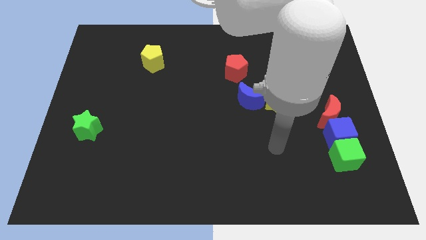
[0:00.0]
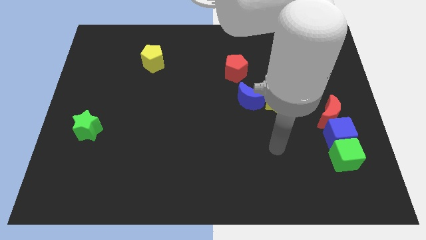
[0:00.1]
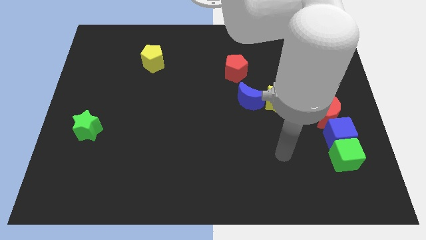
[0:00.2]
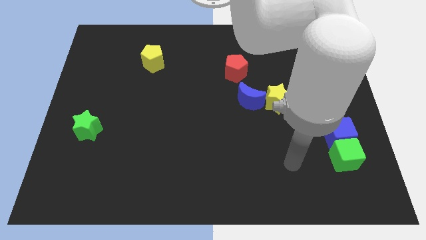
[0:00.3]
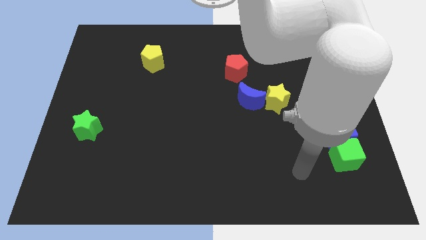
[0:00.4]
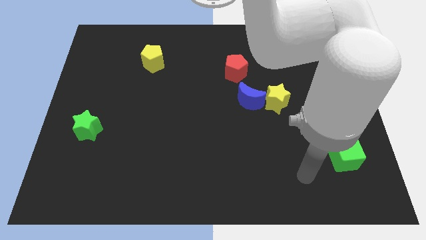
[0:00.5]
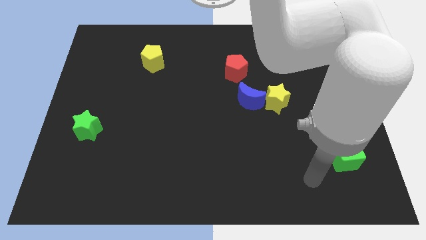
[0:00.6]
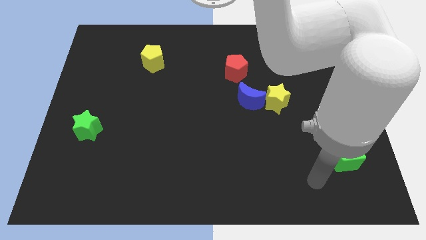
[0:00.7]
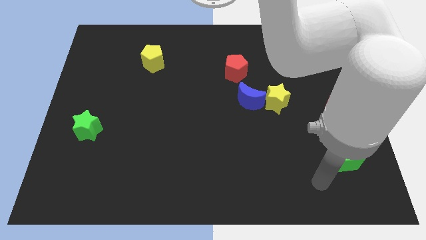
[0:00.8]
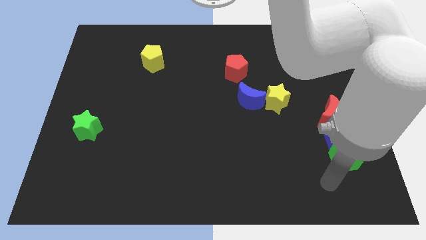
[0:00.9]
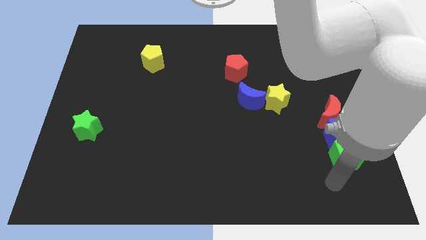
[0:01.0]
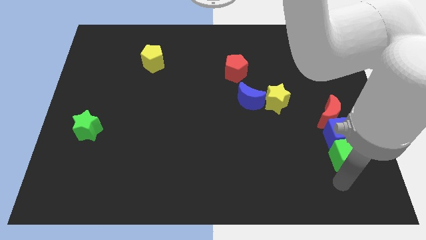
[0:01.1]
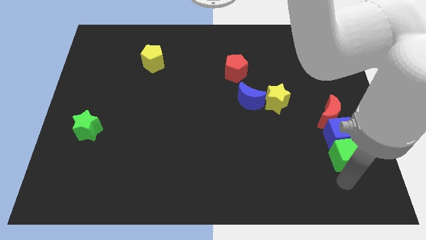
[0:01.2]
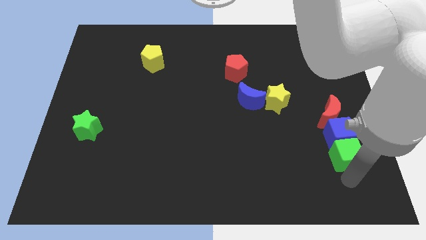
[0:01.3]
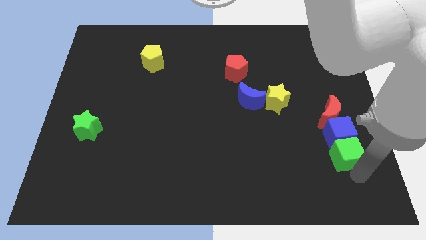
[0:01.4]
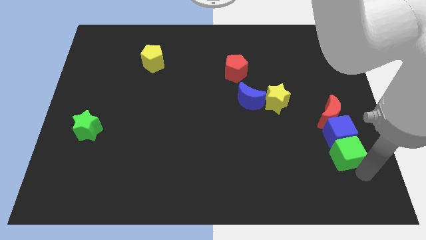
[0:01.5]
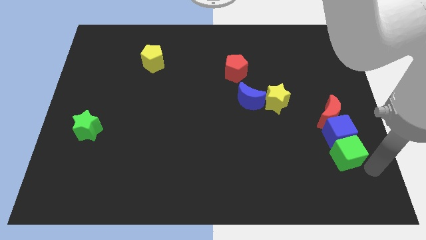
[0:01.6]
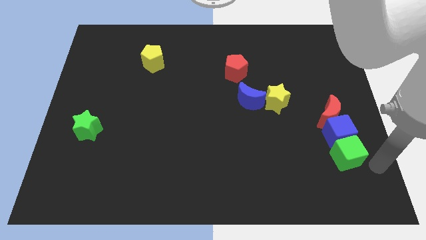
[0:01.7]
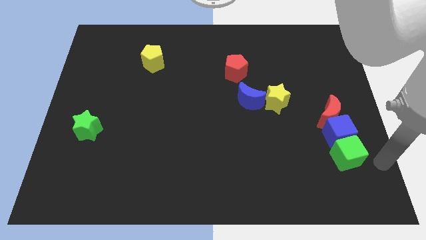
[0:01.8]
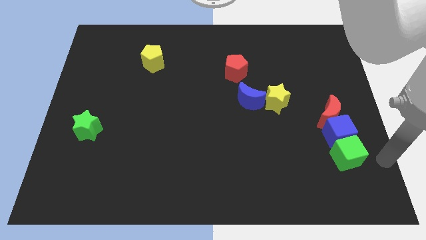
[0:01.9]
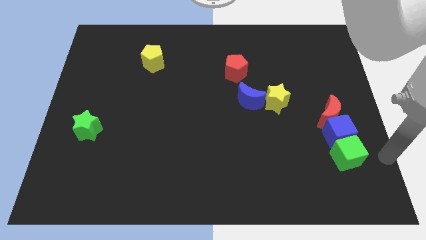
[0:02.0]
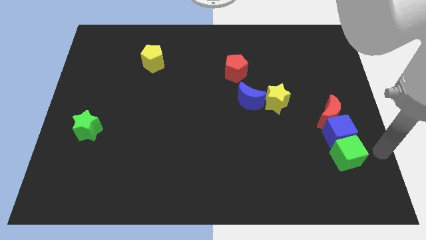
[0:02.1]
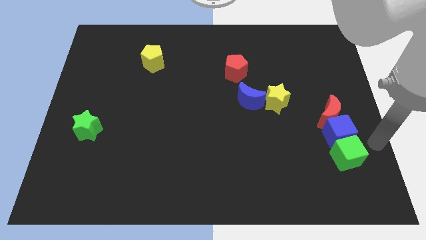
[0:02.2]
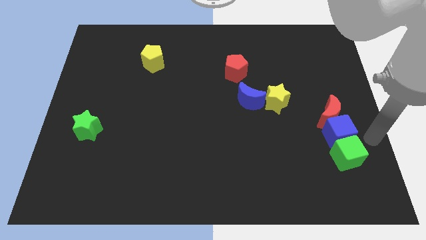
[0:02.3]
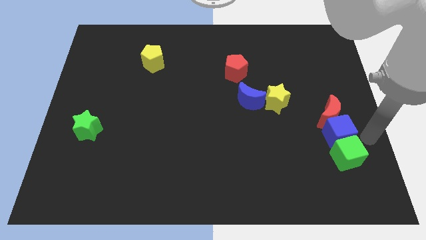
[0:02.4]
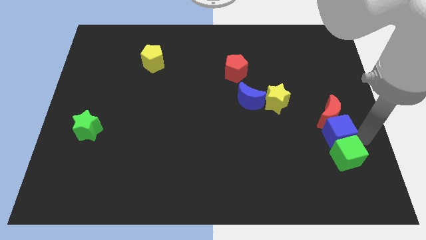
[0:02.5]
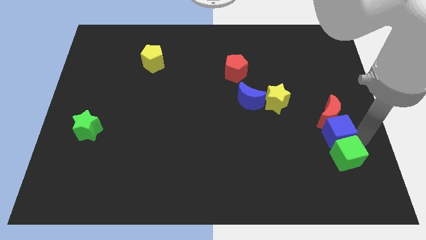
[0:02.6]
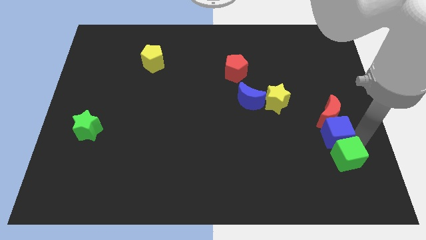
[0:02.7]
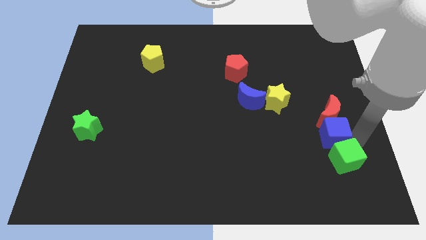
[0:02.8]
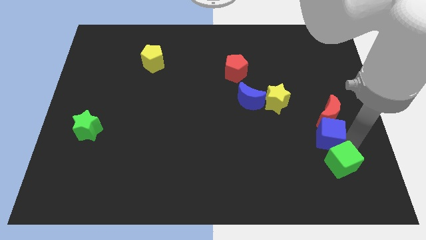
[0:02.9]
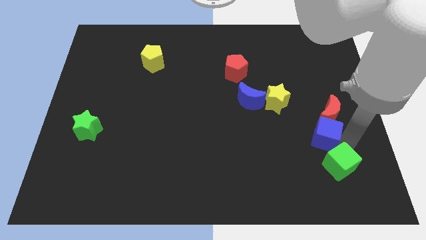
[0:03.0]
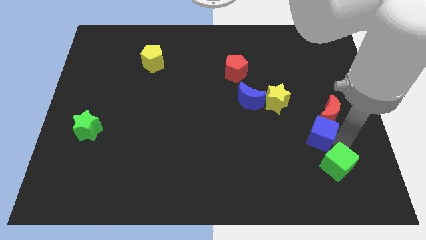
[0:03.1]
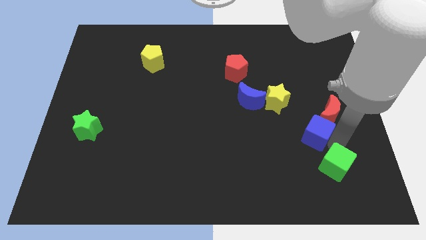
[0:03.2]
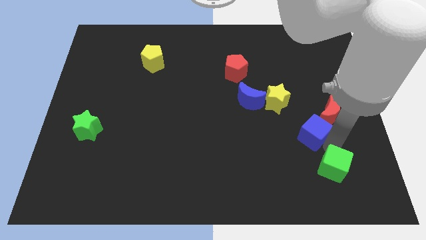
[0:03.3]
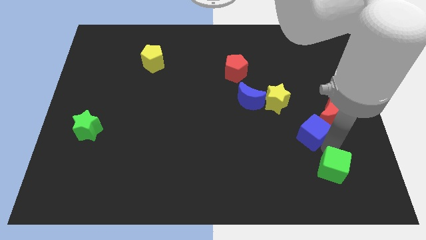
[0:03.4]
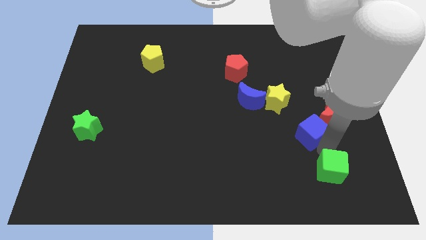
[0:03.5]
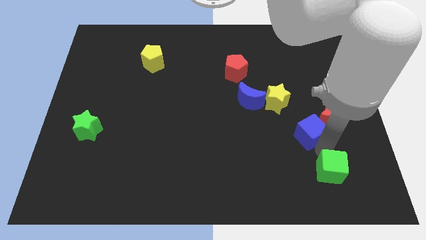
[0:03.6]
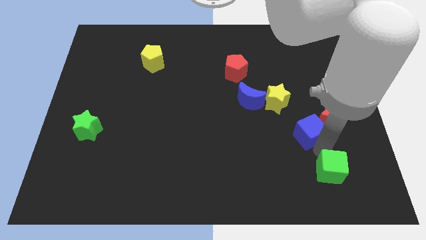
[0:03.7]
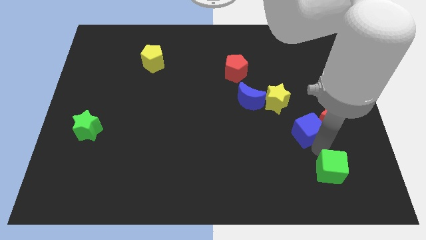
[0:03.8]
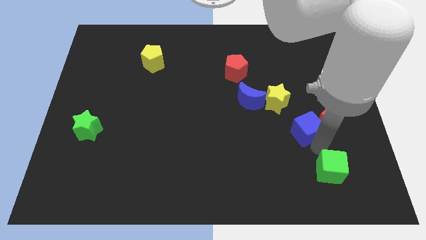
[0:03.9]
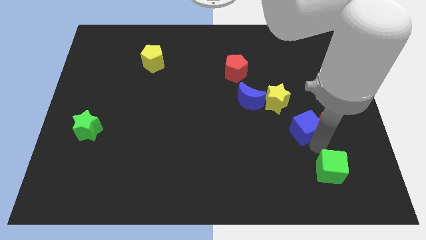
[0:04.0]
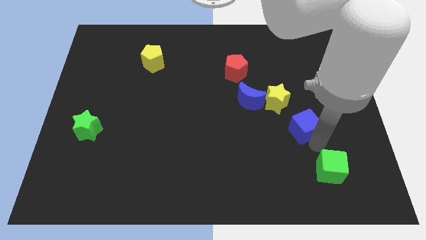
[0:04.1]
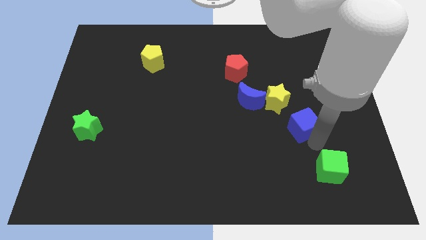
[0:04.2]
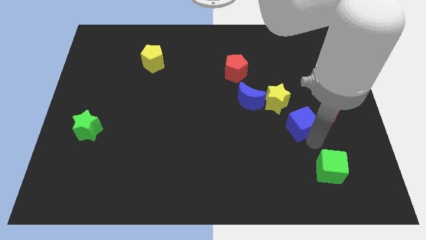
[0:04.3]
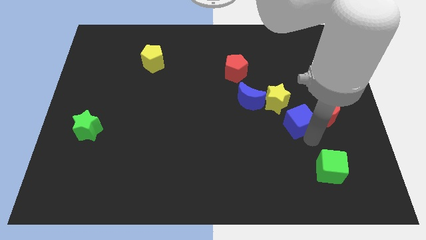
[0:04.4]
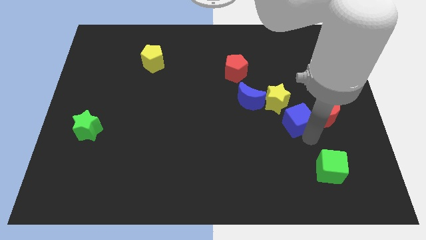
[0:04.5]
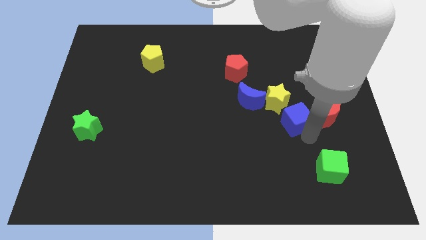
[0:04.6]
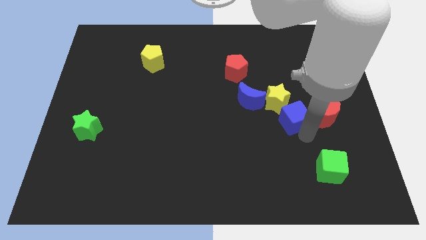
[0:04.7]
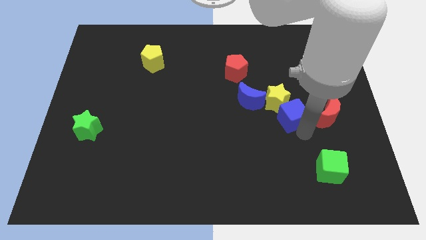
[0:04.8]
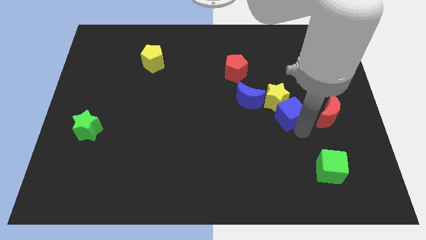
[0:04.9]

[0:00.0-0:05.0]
put the blue cube next to the yellow star

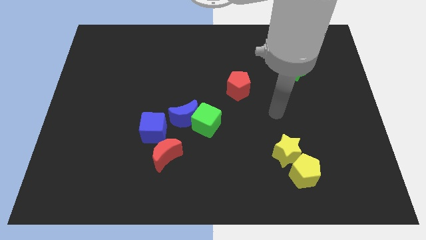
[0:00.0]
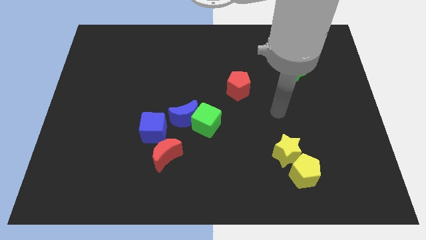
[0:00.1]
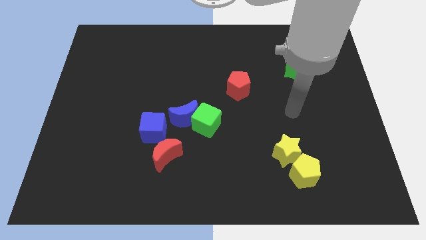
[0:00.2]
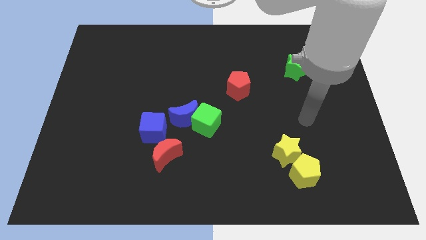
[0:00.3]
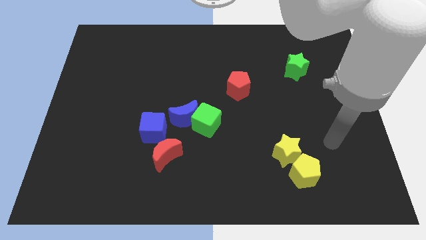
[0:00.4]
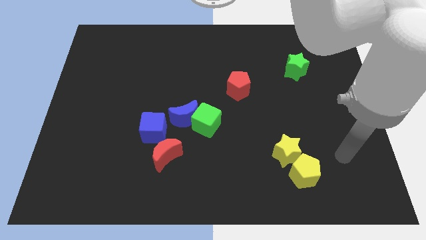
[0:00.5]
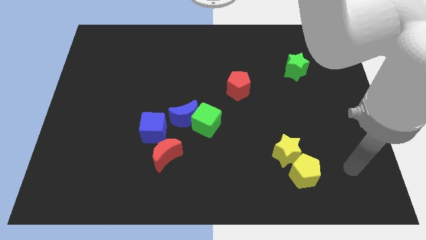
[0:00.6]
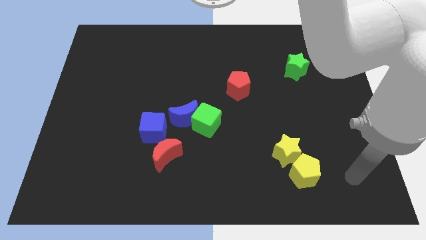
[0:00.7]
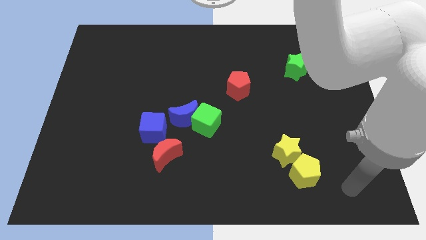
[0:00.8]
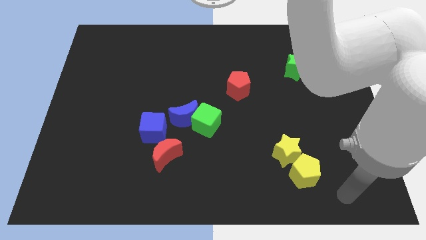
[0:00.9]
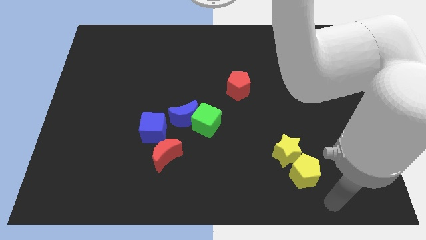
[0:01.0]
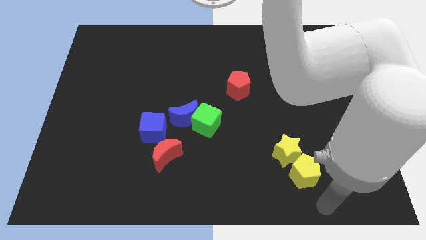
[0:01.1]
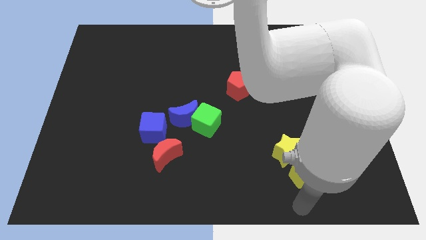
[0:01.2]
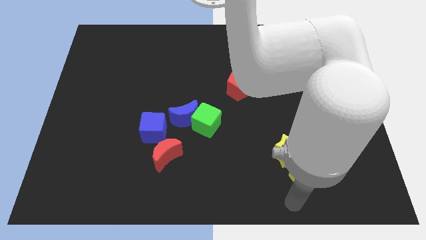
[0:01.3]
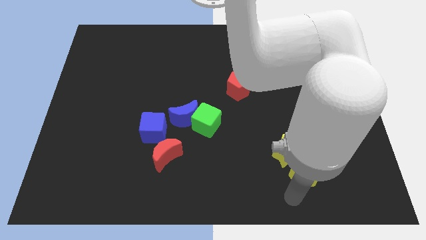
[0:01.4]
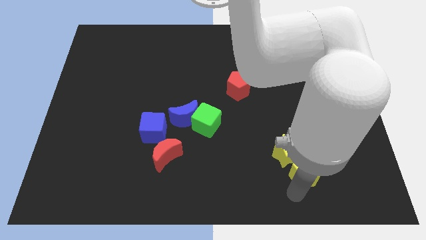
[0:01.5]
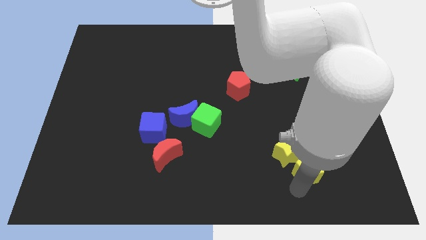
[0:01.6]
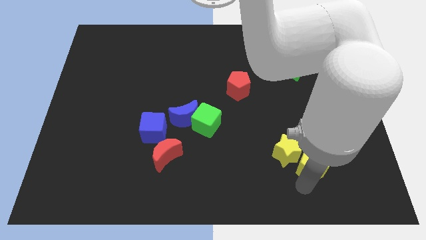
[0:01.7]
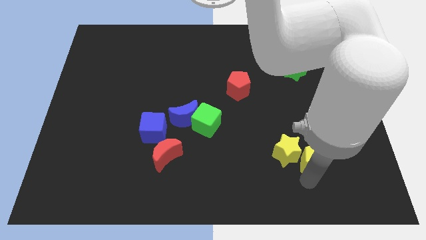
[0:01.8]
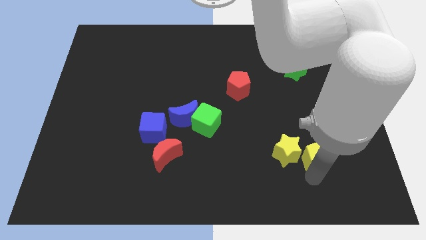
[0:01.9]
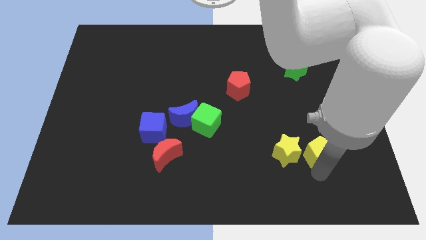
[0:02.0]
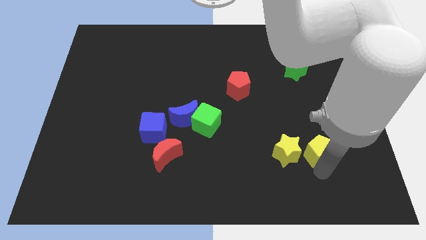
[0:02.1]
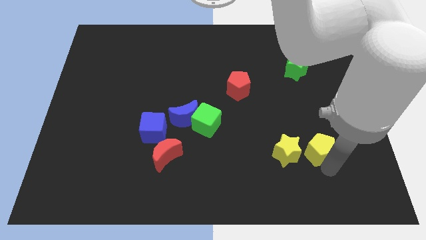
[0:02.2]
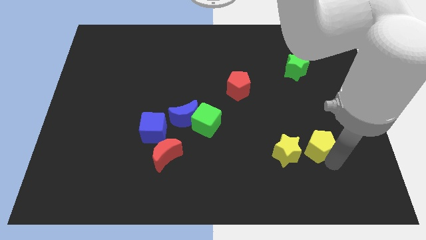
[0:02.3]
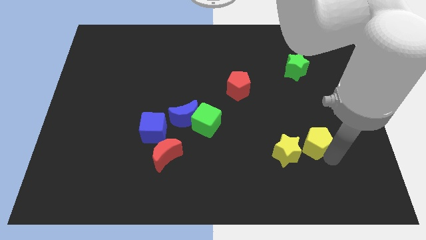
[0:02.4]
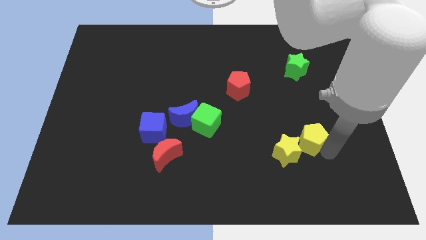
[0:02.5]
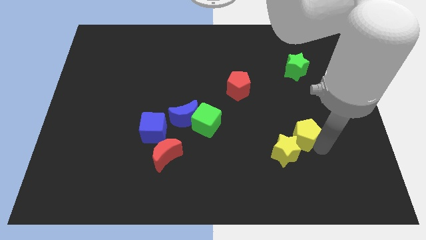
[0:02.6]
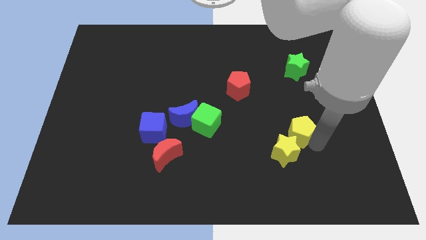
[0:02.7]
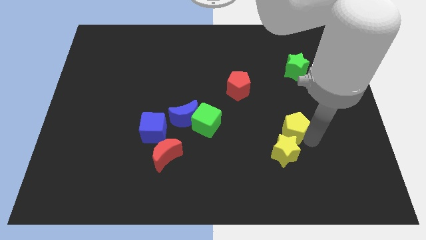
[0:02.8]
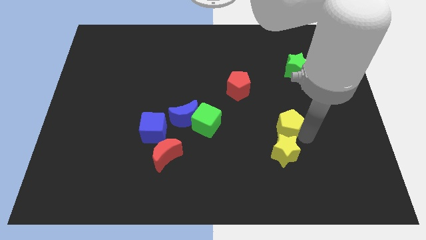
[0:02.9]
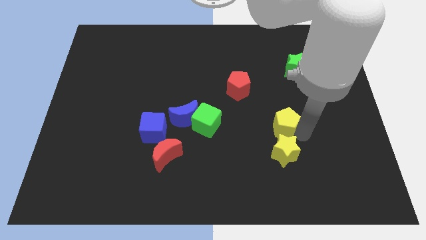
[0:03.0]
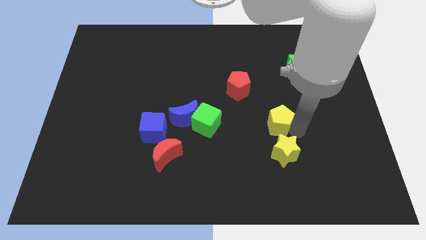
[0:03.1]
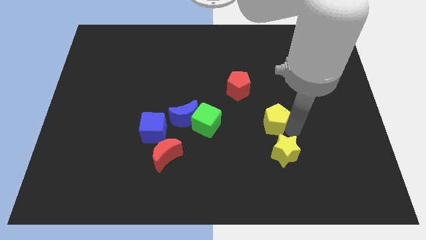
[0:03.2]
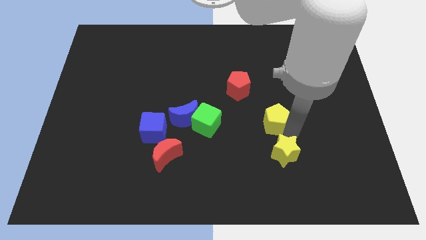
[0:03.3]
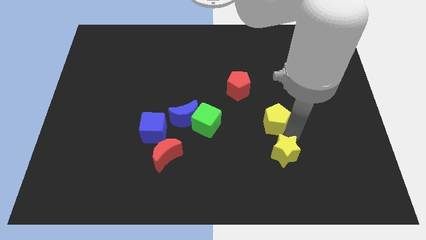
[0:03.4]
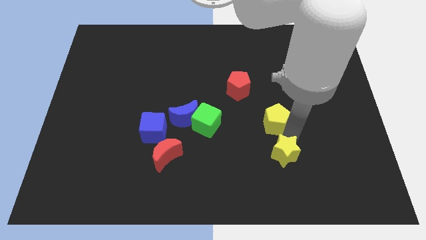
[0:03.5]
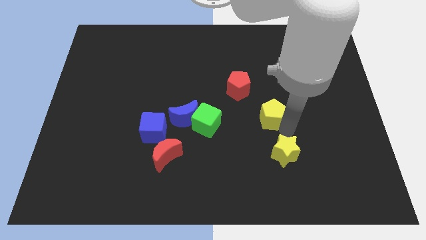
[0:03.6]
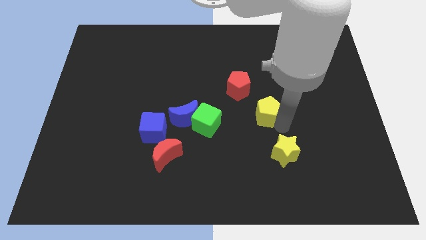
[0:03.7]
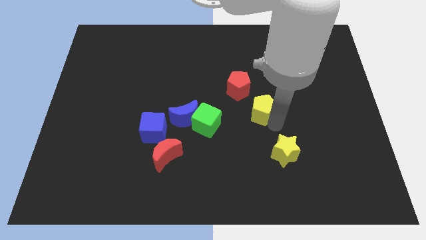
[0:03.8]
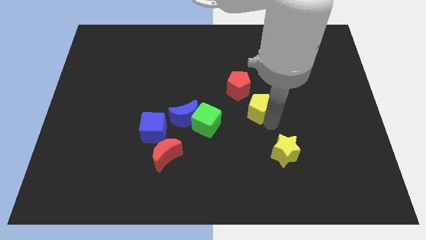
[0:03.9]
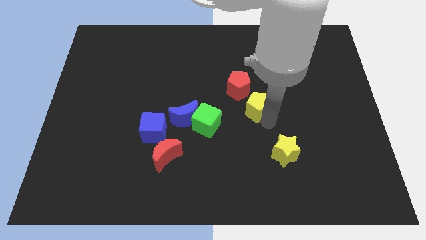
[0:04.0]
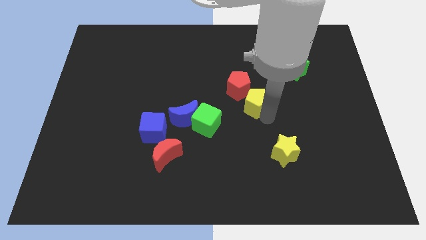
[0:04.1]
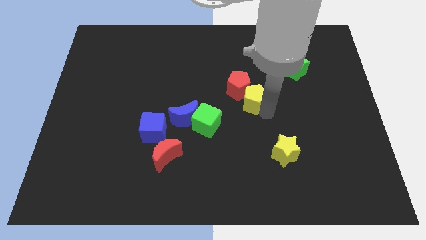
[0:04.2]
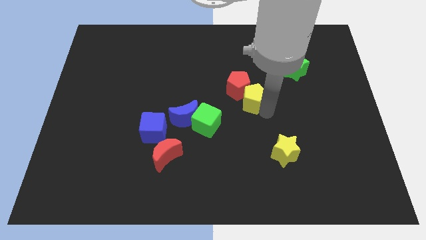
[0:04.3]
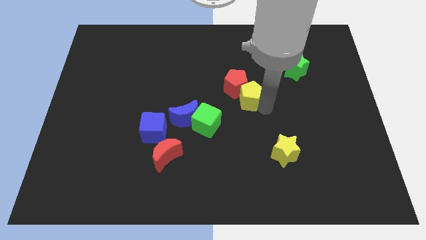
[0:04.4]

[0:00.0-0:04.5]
move the yellow pentagon close to the red pentagon
